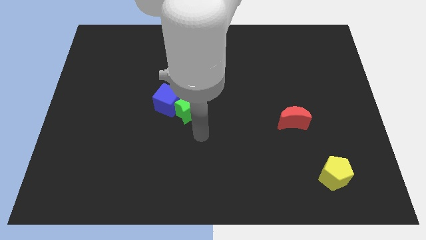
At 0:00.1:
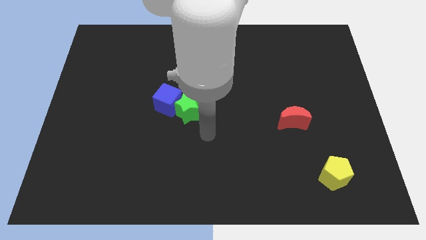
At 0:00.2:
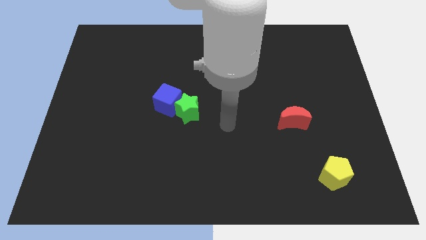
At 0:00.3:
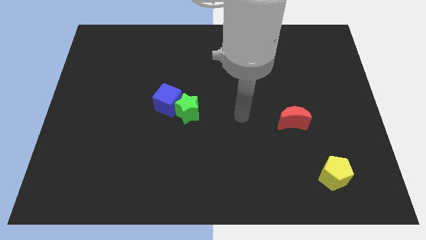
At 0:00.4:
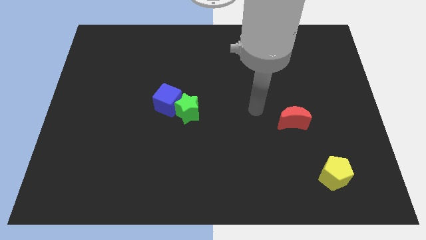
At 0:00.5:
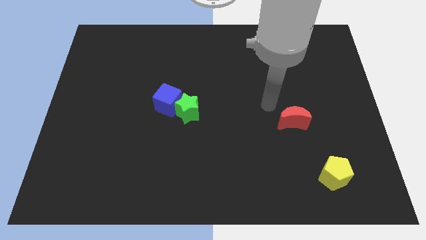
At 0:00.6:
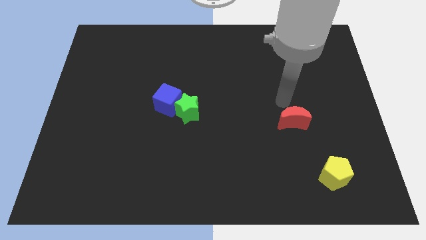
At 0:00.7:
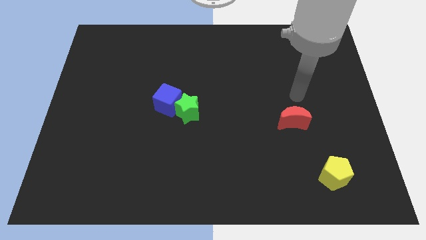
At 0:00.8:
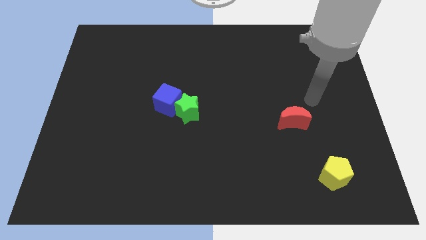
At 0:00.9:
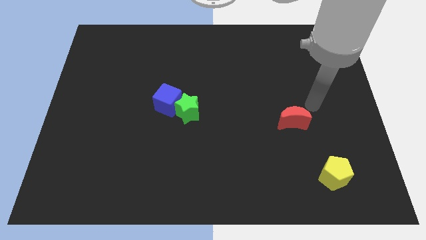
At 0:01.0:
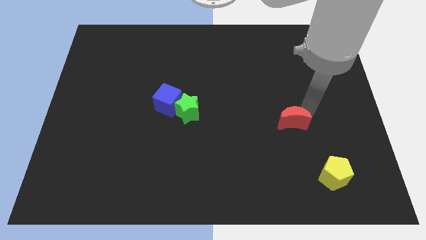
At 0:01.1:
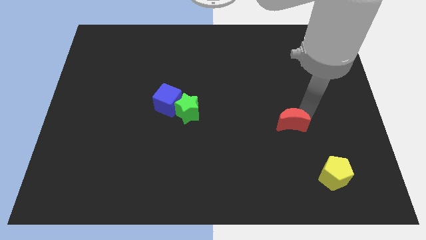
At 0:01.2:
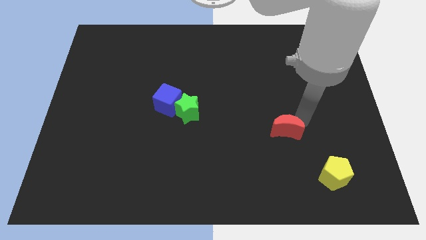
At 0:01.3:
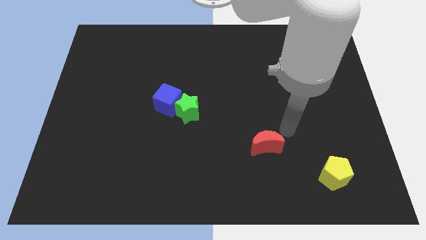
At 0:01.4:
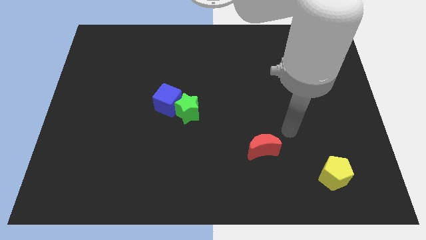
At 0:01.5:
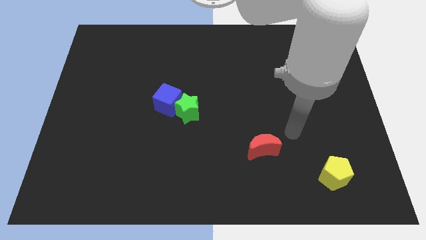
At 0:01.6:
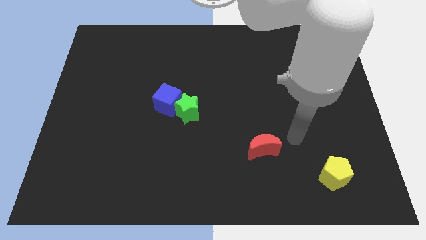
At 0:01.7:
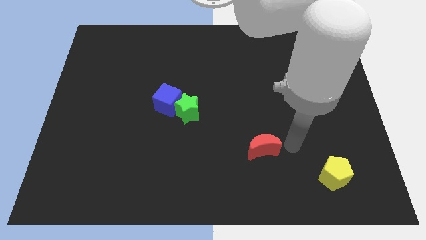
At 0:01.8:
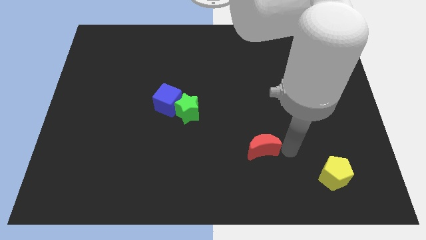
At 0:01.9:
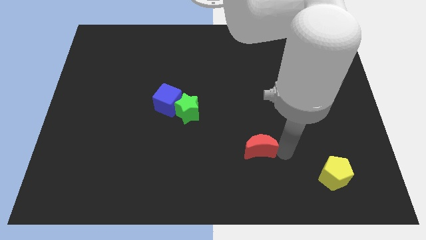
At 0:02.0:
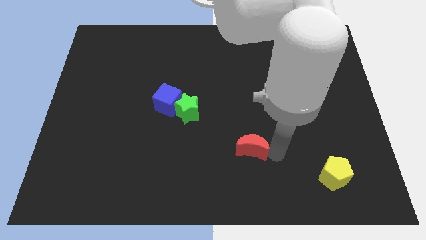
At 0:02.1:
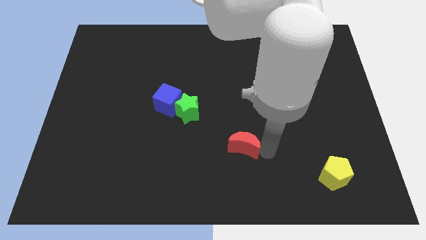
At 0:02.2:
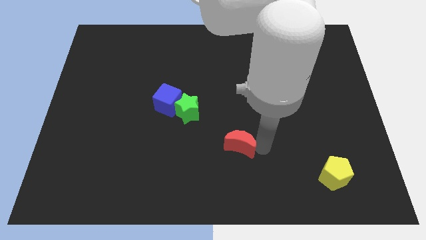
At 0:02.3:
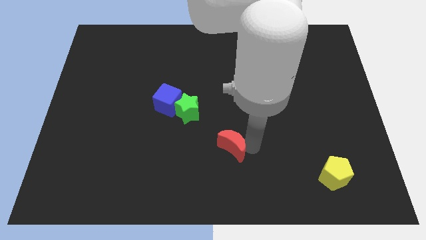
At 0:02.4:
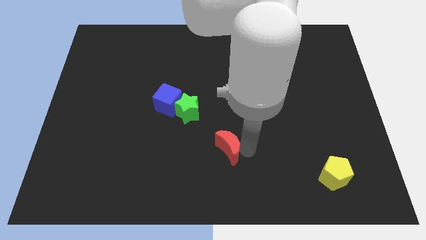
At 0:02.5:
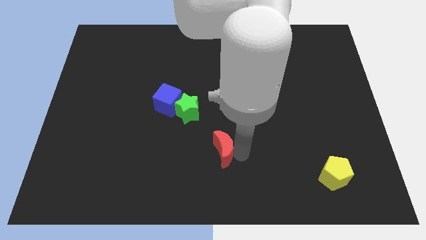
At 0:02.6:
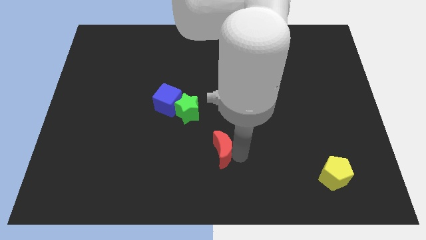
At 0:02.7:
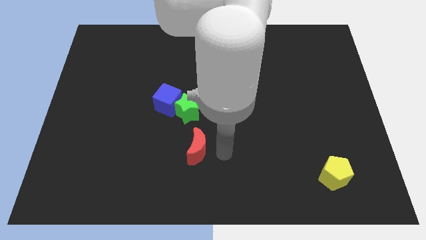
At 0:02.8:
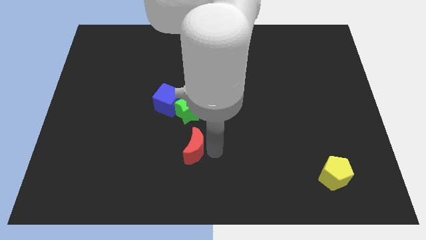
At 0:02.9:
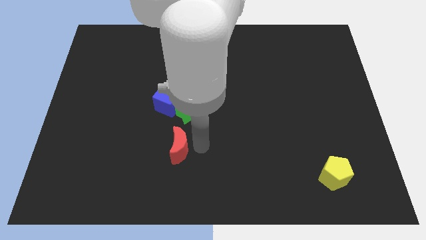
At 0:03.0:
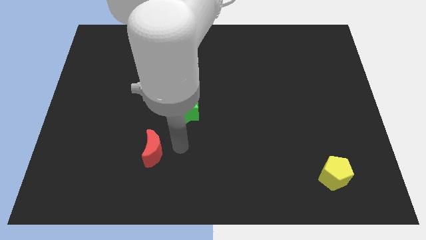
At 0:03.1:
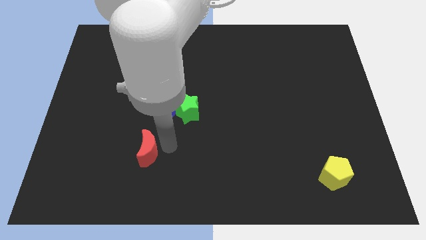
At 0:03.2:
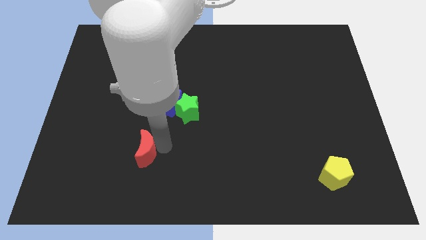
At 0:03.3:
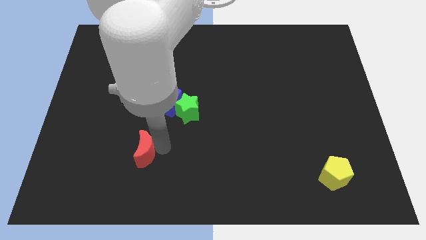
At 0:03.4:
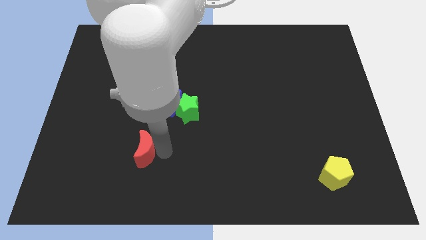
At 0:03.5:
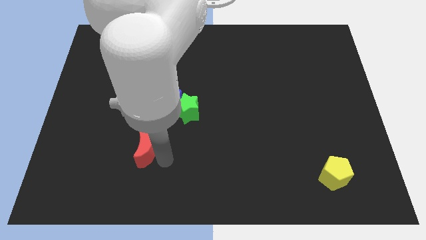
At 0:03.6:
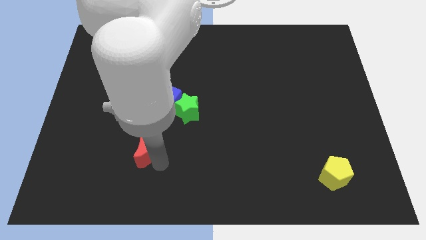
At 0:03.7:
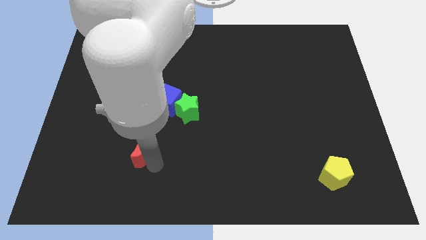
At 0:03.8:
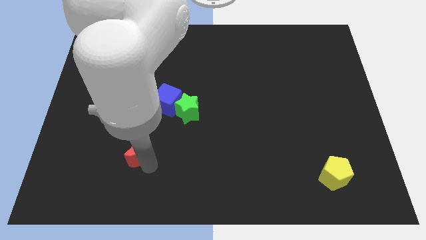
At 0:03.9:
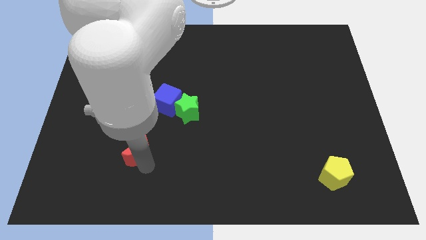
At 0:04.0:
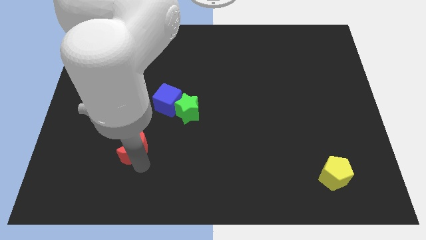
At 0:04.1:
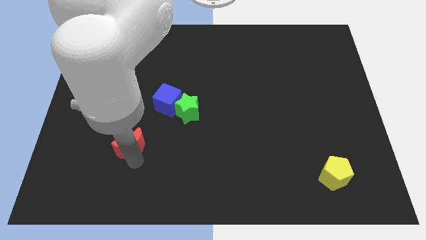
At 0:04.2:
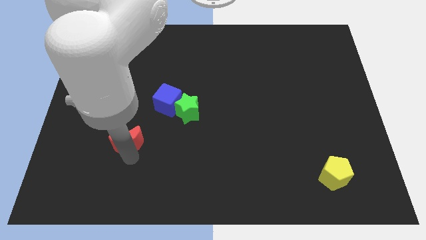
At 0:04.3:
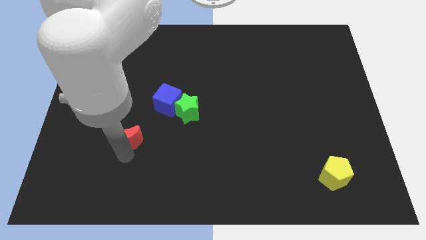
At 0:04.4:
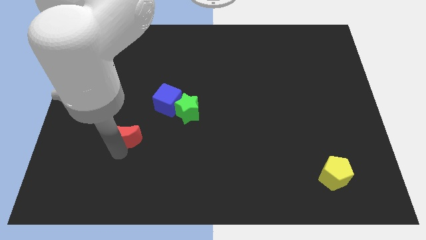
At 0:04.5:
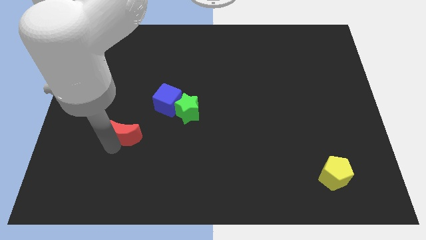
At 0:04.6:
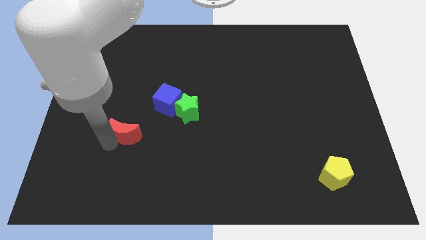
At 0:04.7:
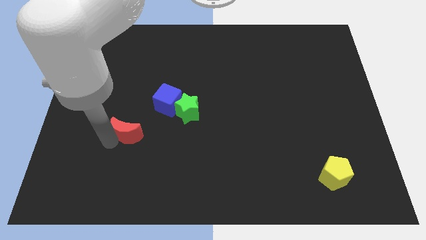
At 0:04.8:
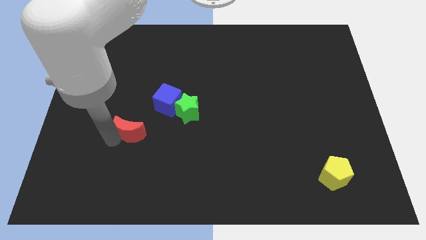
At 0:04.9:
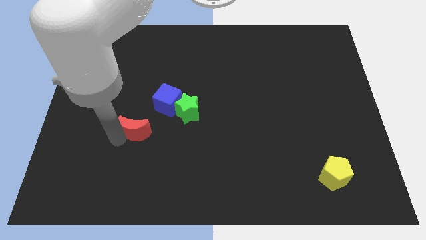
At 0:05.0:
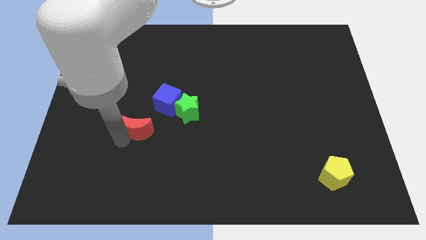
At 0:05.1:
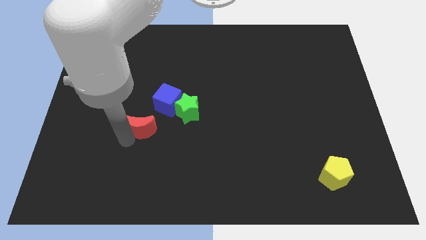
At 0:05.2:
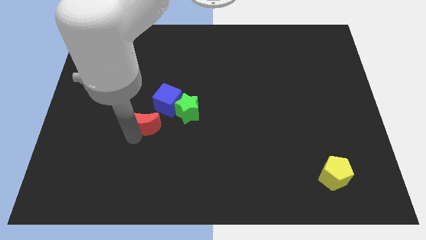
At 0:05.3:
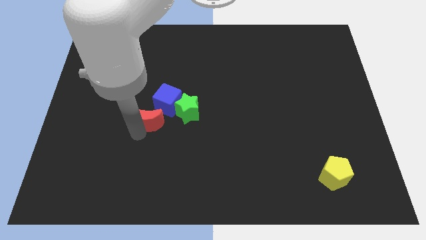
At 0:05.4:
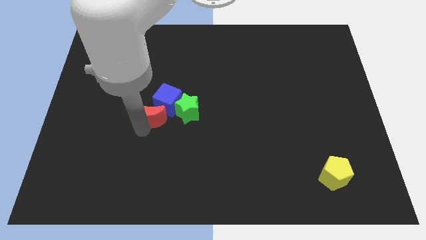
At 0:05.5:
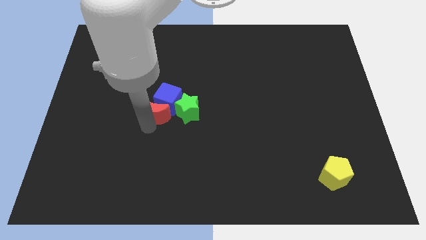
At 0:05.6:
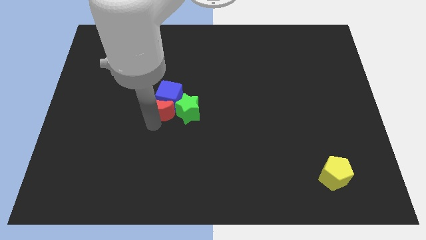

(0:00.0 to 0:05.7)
move the red moon to the cube

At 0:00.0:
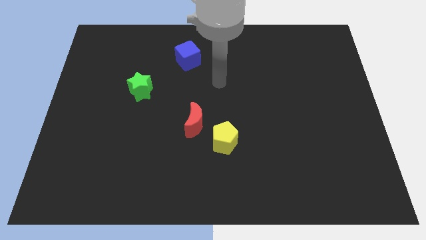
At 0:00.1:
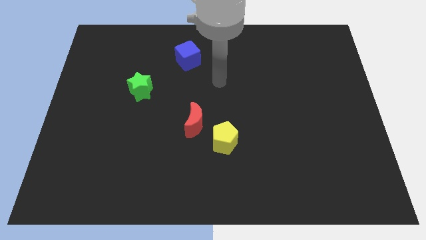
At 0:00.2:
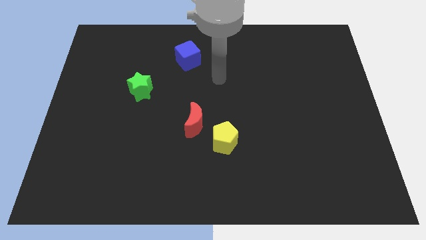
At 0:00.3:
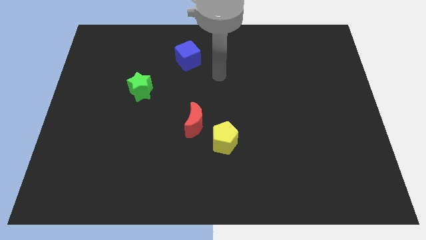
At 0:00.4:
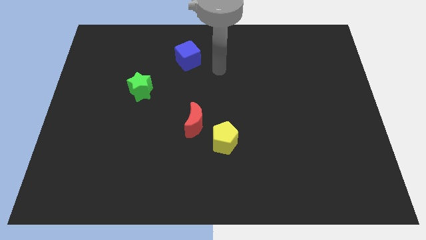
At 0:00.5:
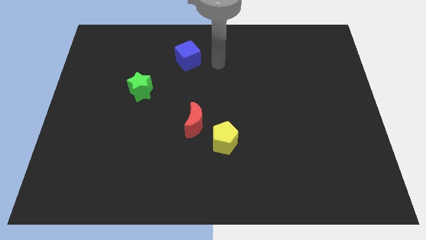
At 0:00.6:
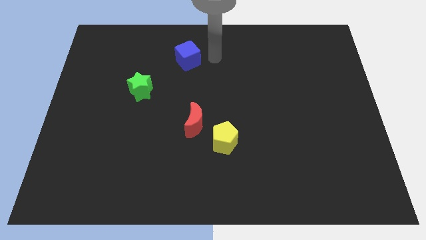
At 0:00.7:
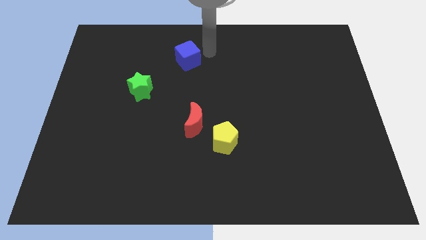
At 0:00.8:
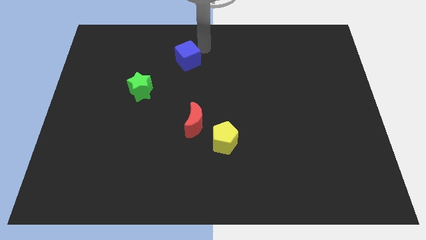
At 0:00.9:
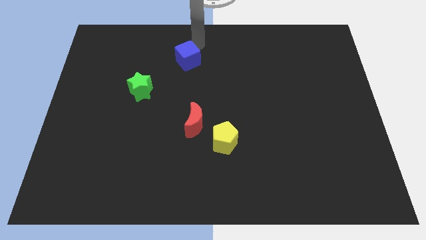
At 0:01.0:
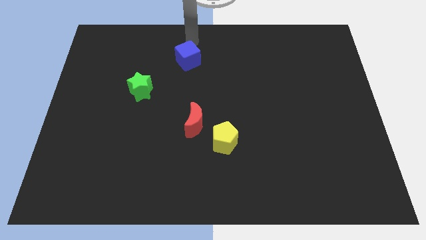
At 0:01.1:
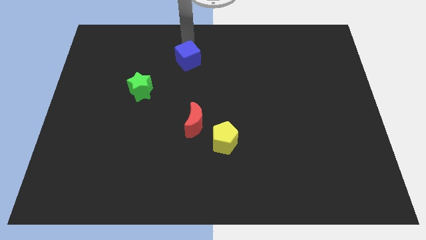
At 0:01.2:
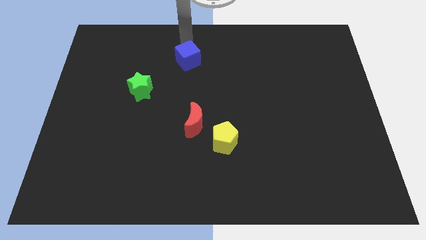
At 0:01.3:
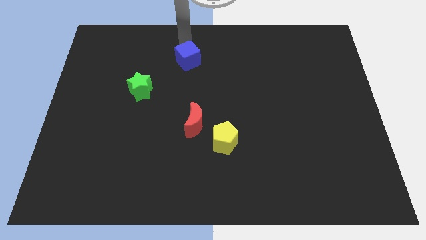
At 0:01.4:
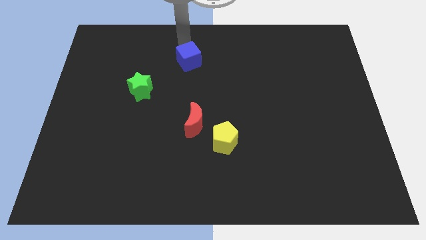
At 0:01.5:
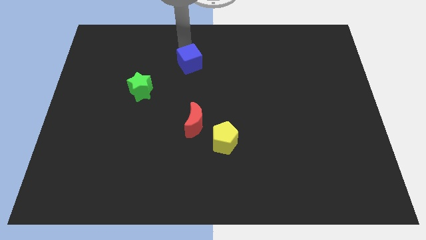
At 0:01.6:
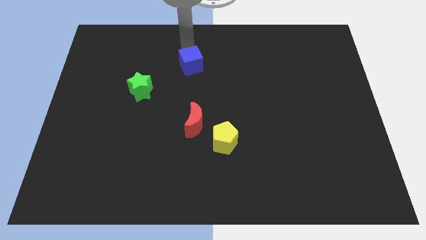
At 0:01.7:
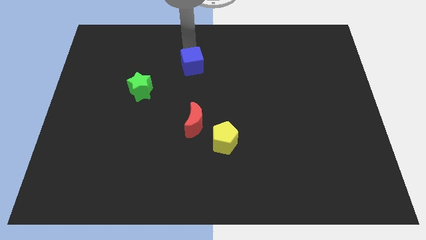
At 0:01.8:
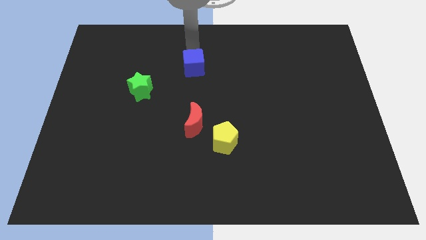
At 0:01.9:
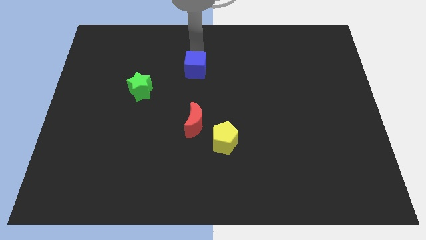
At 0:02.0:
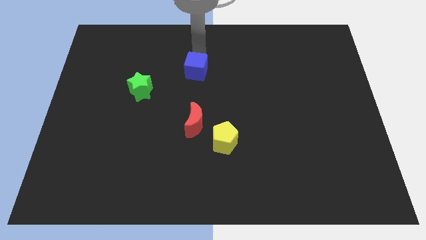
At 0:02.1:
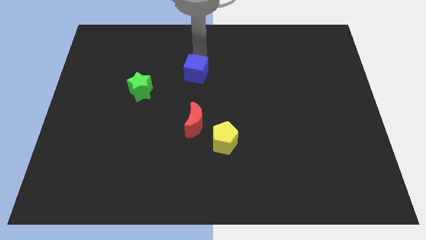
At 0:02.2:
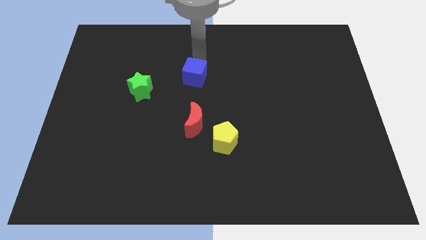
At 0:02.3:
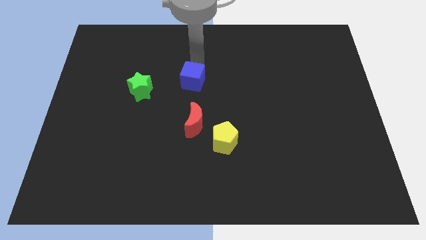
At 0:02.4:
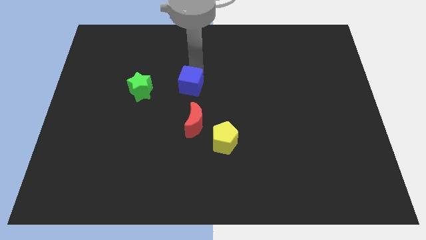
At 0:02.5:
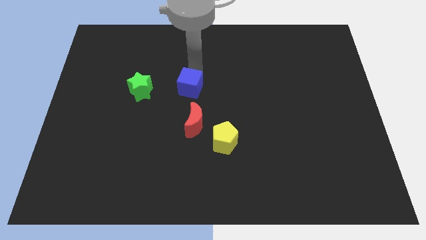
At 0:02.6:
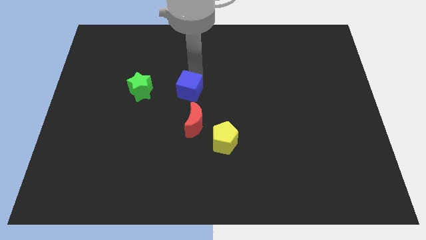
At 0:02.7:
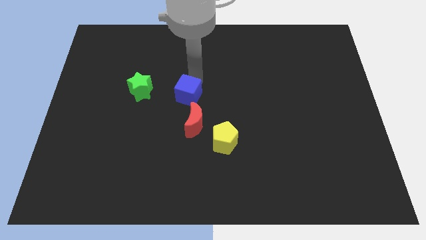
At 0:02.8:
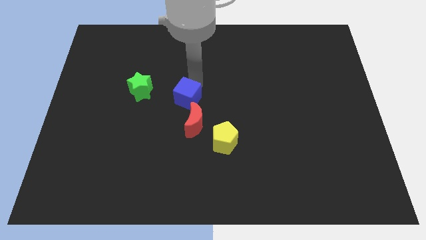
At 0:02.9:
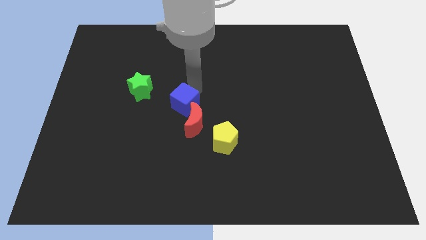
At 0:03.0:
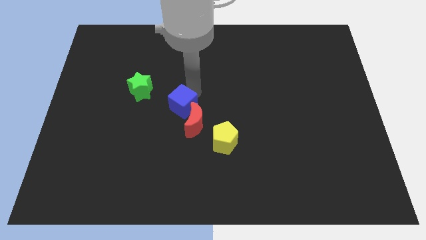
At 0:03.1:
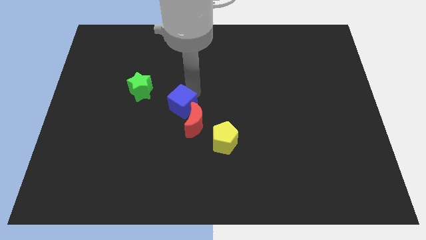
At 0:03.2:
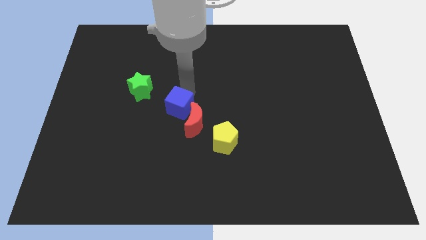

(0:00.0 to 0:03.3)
slide the cube to the red moon
